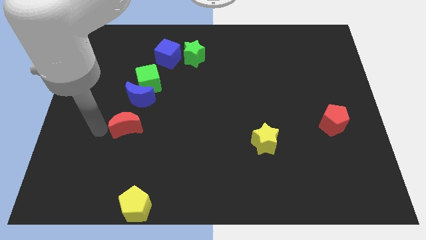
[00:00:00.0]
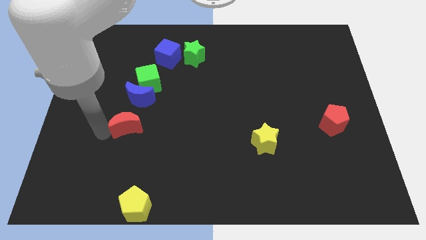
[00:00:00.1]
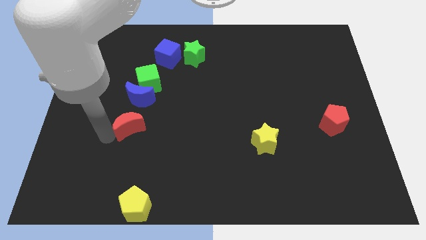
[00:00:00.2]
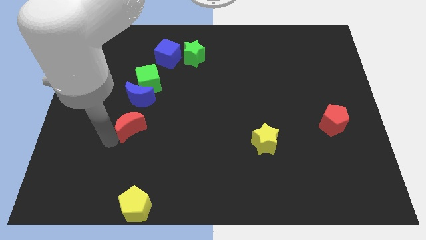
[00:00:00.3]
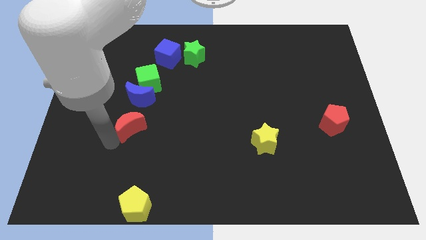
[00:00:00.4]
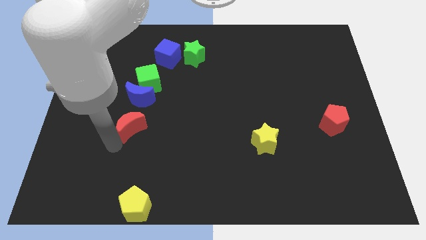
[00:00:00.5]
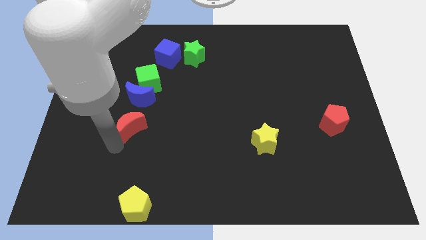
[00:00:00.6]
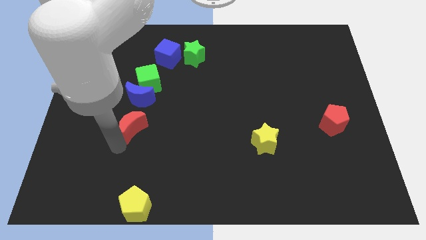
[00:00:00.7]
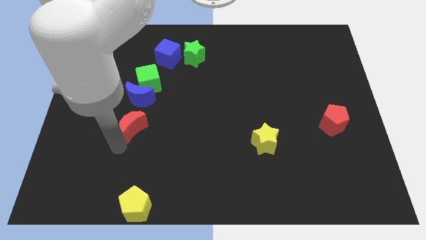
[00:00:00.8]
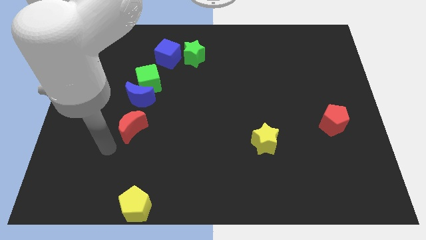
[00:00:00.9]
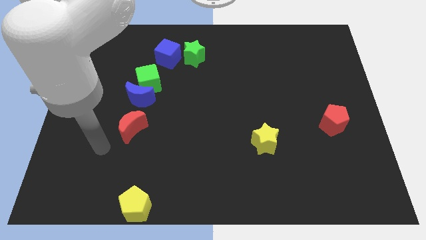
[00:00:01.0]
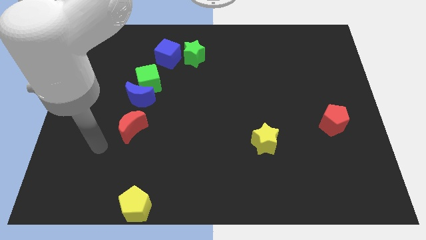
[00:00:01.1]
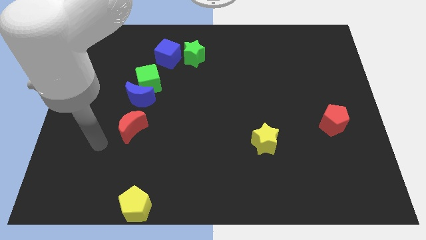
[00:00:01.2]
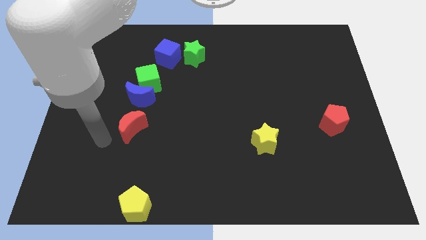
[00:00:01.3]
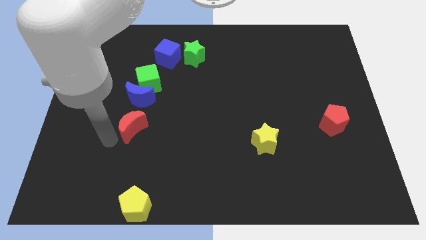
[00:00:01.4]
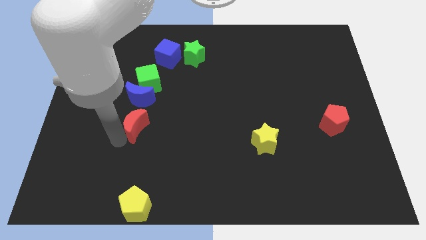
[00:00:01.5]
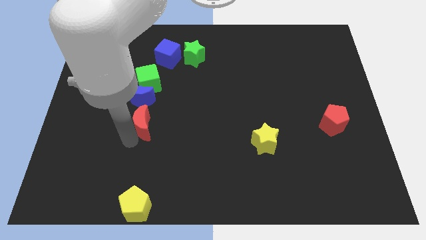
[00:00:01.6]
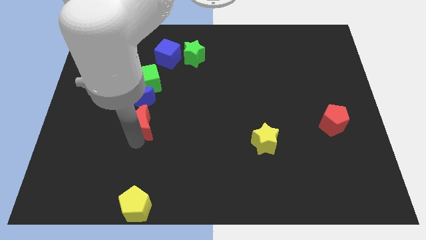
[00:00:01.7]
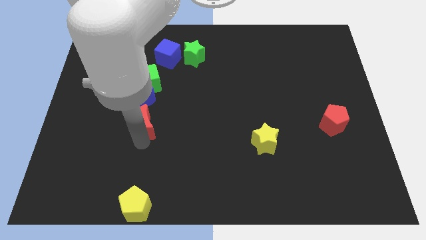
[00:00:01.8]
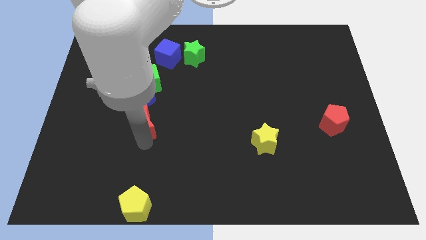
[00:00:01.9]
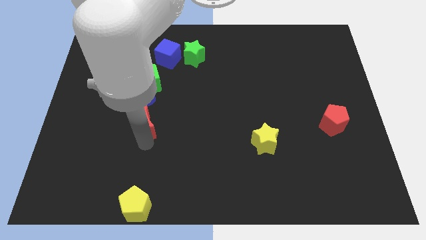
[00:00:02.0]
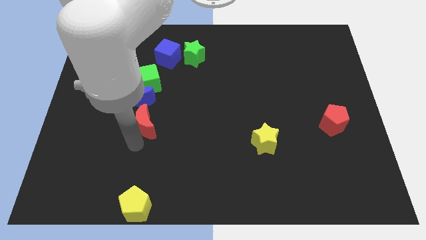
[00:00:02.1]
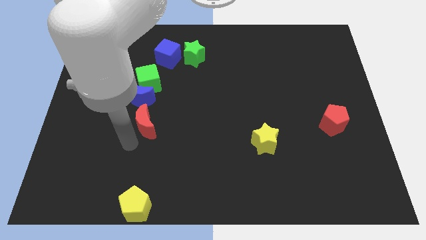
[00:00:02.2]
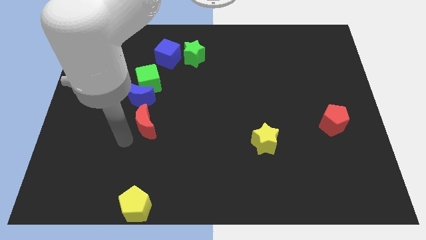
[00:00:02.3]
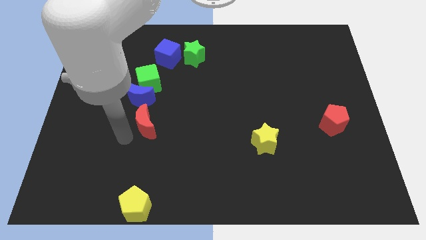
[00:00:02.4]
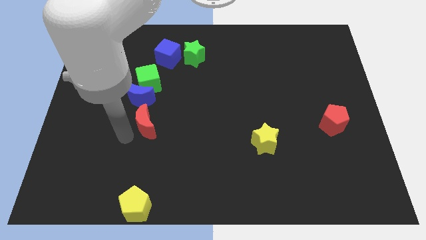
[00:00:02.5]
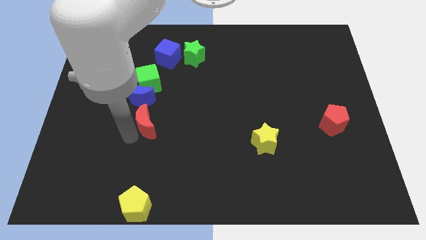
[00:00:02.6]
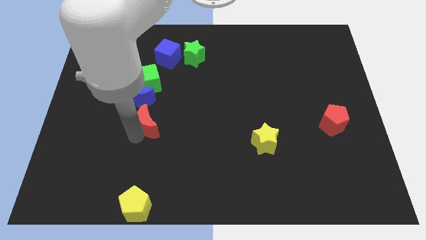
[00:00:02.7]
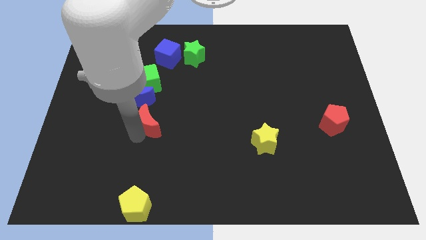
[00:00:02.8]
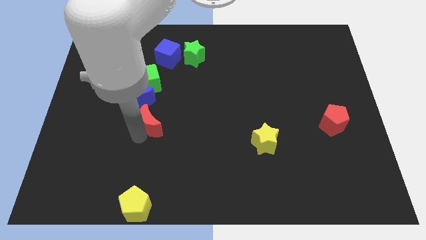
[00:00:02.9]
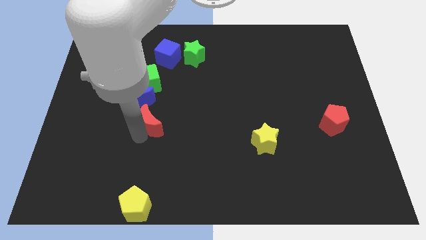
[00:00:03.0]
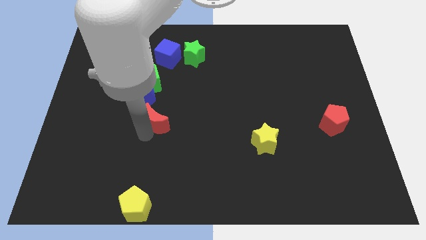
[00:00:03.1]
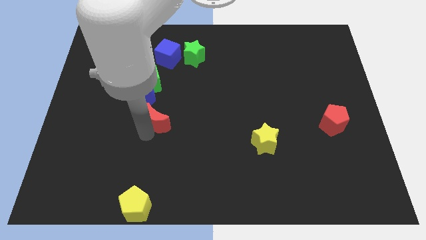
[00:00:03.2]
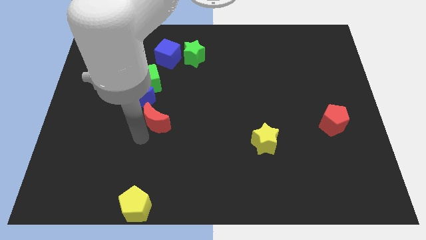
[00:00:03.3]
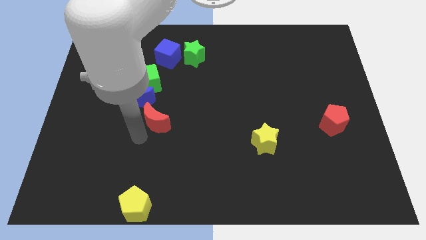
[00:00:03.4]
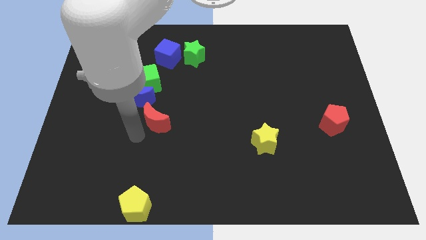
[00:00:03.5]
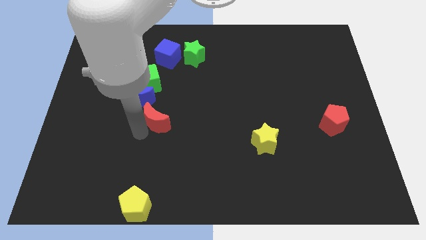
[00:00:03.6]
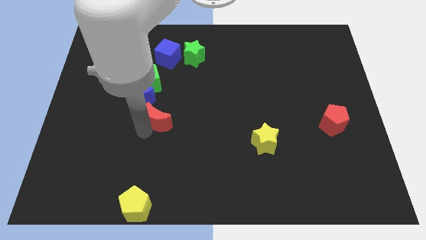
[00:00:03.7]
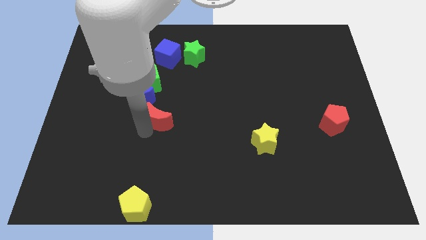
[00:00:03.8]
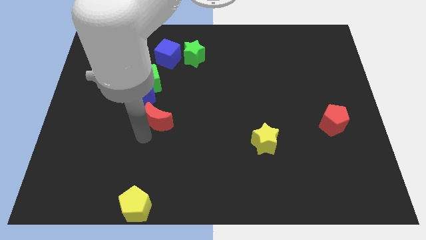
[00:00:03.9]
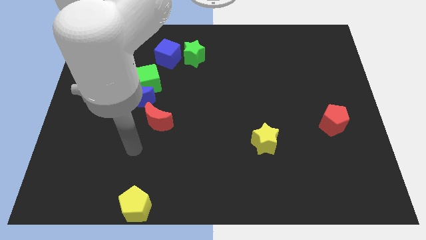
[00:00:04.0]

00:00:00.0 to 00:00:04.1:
push the red crescent to the bottom right of the blue crescent

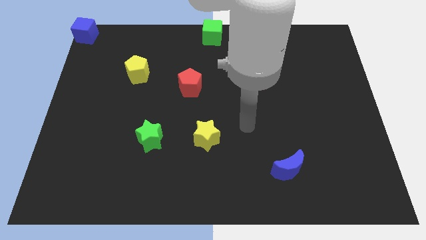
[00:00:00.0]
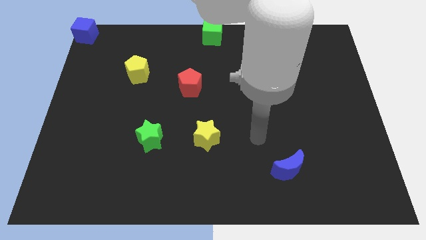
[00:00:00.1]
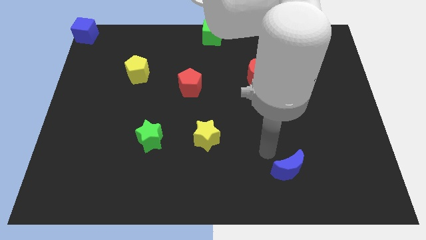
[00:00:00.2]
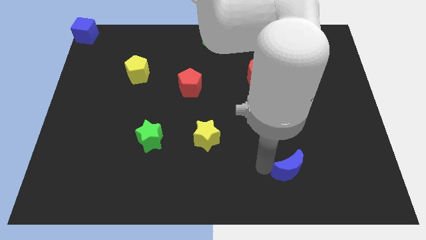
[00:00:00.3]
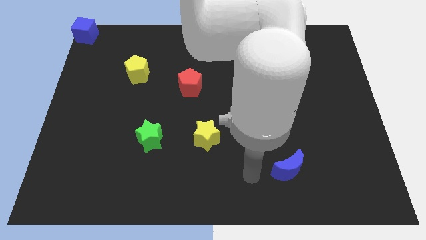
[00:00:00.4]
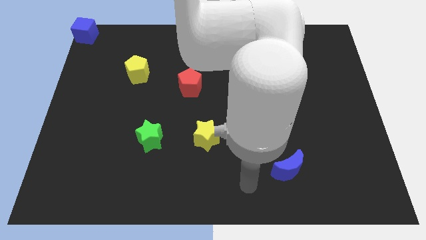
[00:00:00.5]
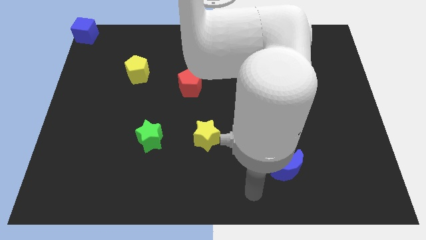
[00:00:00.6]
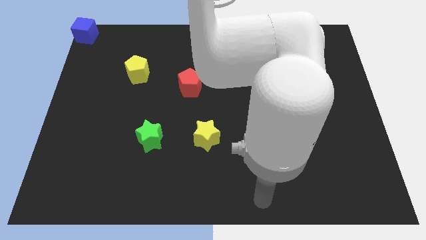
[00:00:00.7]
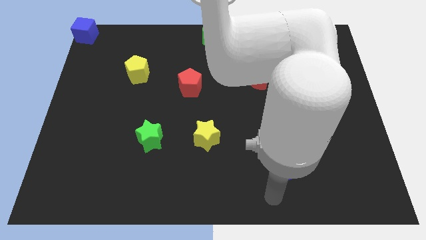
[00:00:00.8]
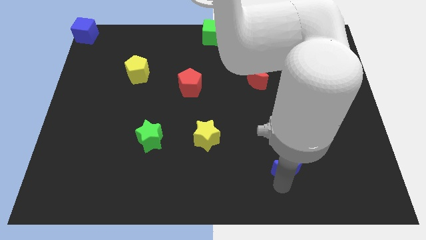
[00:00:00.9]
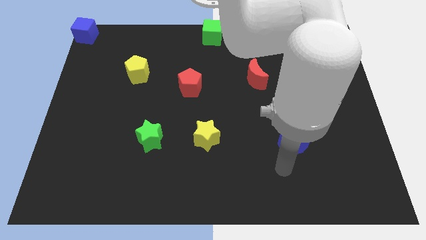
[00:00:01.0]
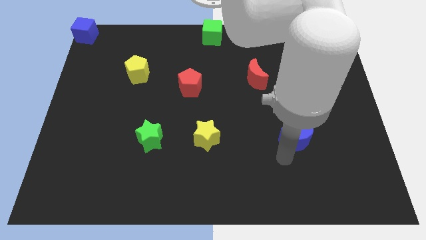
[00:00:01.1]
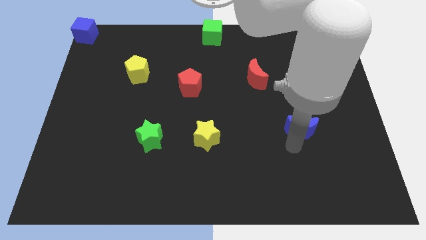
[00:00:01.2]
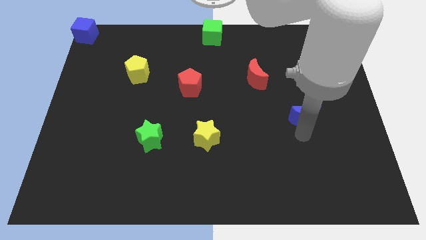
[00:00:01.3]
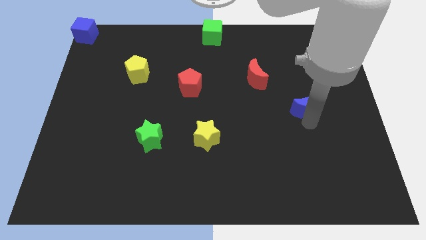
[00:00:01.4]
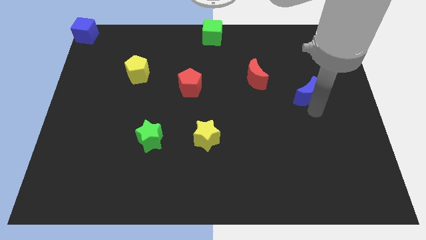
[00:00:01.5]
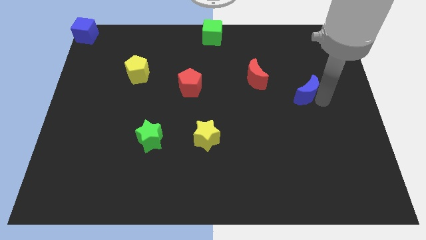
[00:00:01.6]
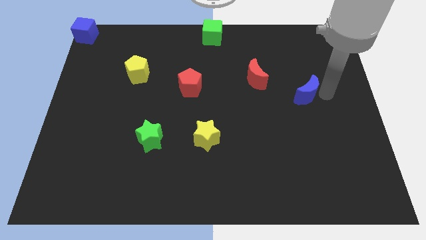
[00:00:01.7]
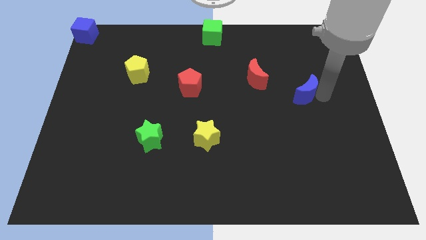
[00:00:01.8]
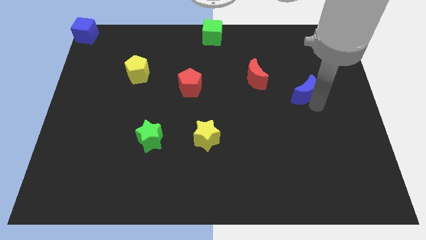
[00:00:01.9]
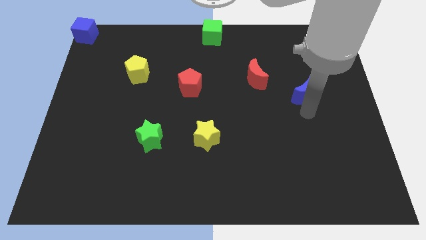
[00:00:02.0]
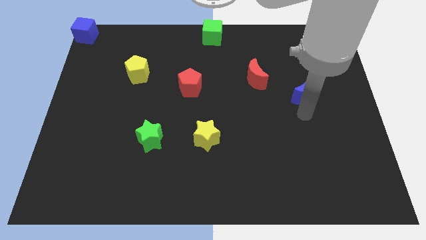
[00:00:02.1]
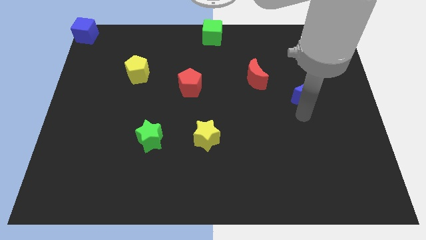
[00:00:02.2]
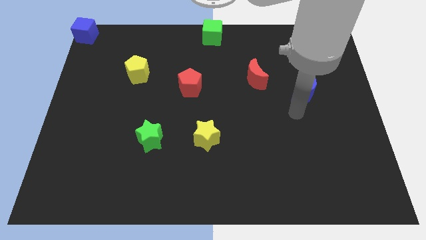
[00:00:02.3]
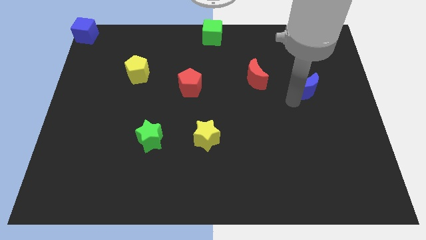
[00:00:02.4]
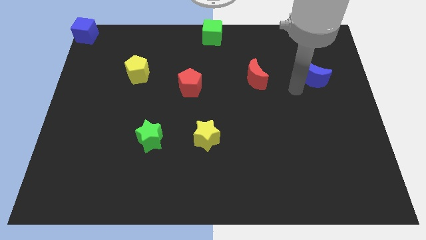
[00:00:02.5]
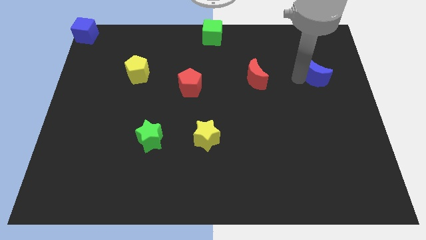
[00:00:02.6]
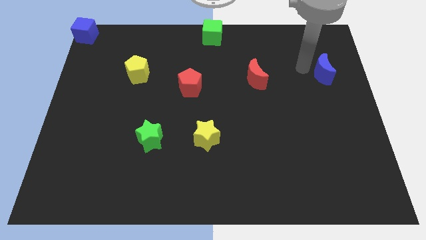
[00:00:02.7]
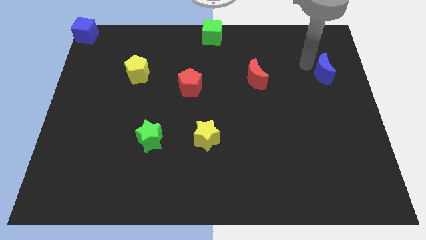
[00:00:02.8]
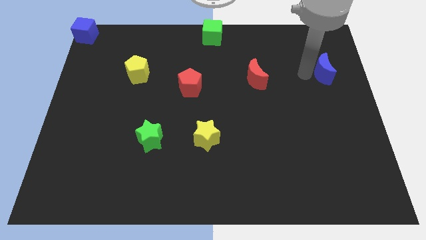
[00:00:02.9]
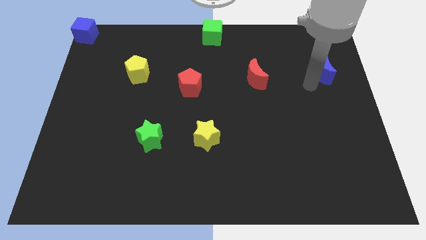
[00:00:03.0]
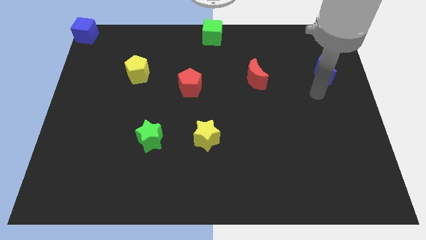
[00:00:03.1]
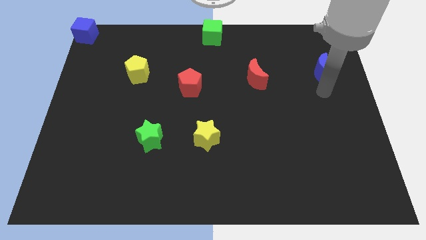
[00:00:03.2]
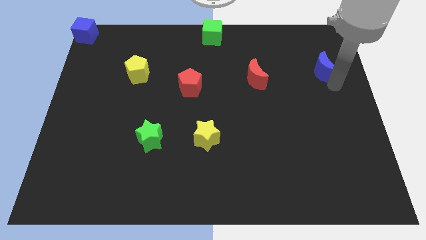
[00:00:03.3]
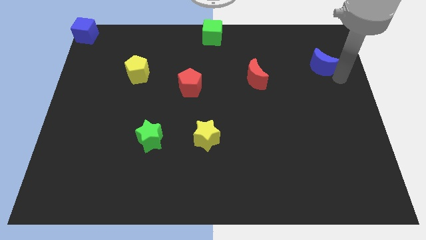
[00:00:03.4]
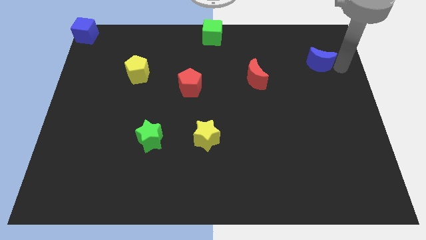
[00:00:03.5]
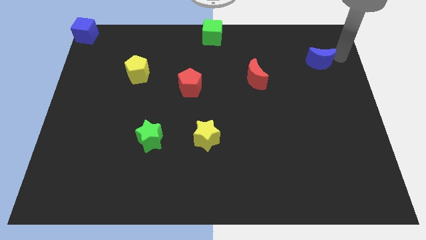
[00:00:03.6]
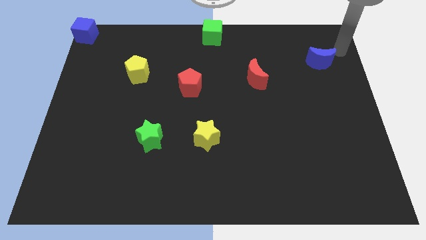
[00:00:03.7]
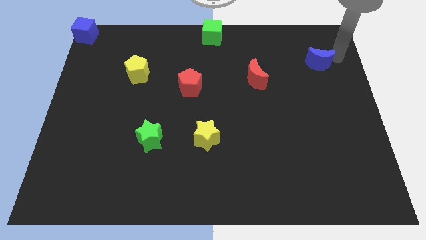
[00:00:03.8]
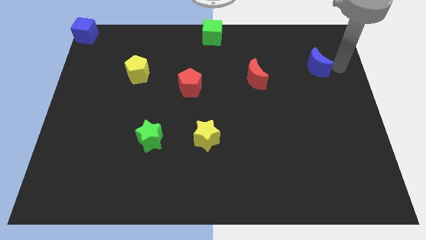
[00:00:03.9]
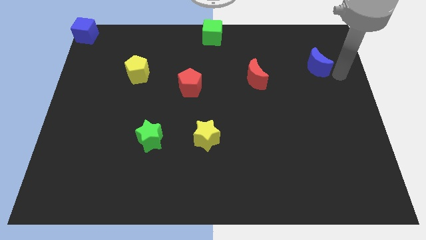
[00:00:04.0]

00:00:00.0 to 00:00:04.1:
move the blue crescent to the right of the red crescent horizontally

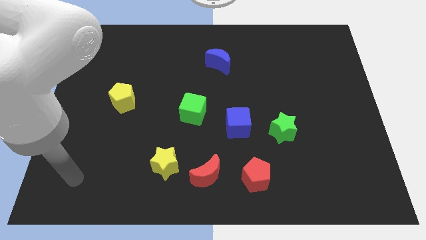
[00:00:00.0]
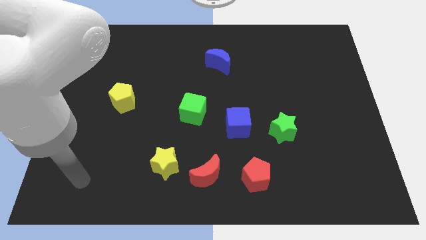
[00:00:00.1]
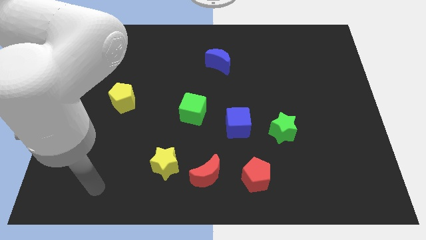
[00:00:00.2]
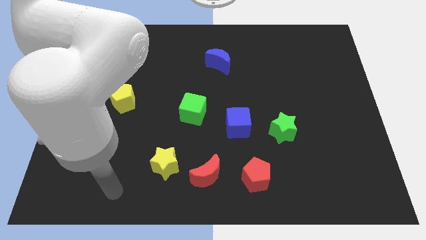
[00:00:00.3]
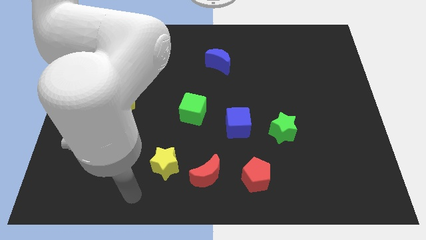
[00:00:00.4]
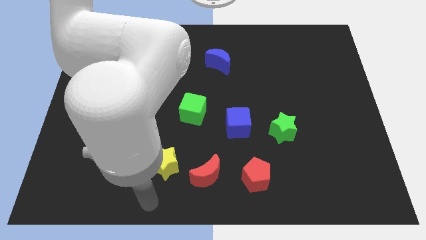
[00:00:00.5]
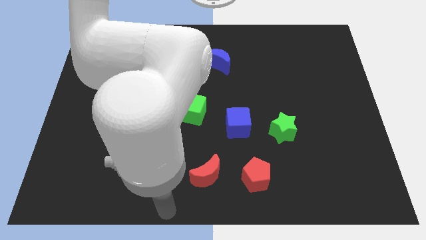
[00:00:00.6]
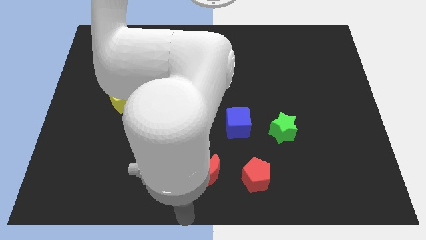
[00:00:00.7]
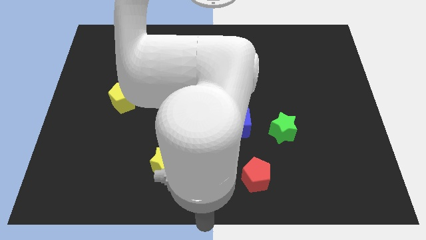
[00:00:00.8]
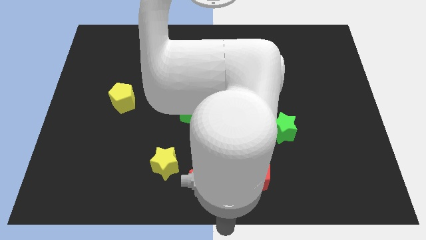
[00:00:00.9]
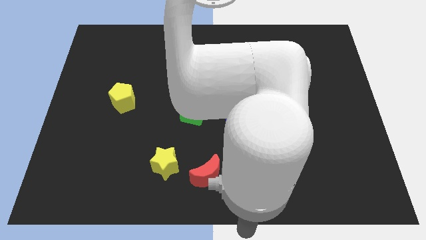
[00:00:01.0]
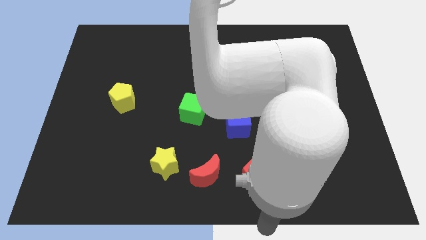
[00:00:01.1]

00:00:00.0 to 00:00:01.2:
move your hand towards the bottom center
